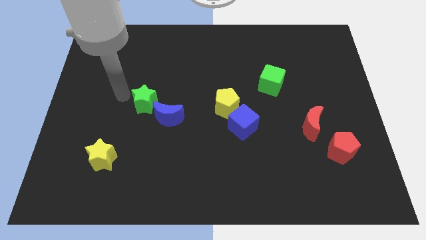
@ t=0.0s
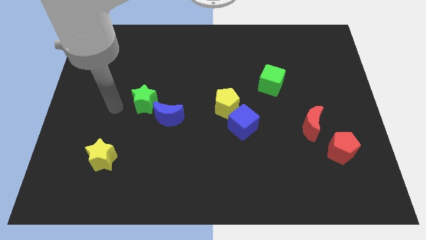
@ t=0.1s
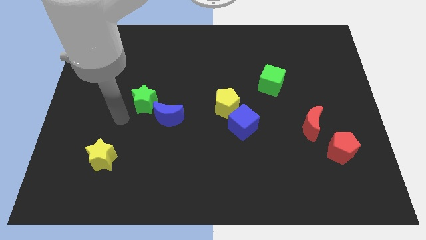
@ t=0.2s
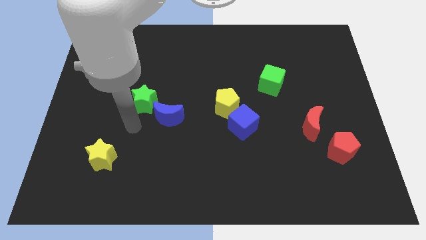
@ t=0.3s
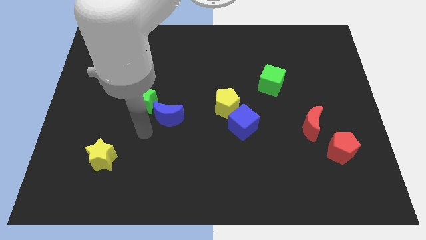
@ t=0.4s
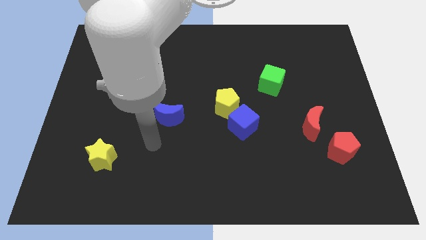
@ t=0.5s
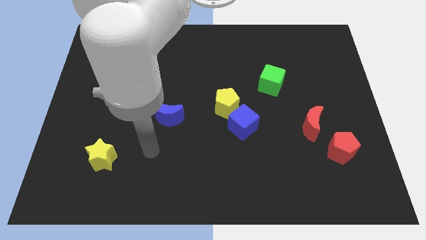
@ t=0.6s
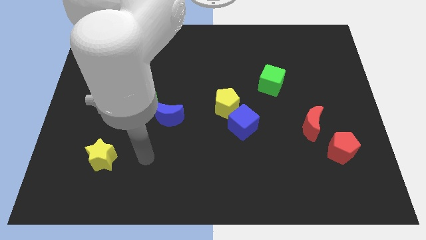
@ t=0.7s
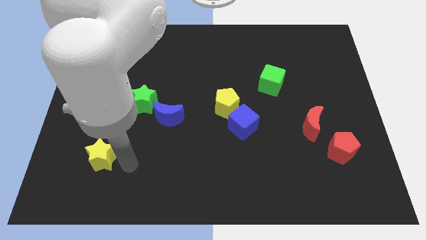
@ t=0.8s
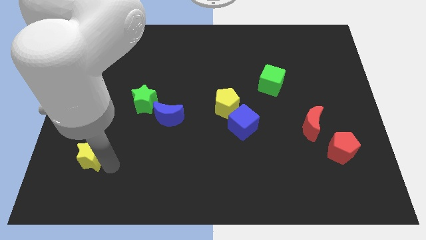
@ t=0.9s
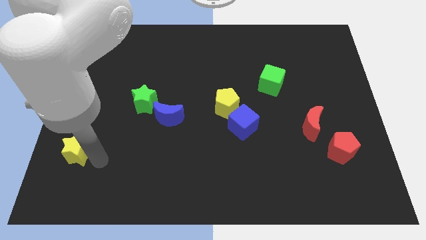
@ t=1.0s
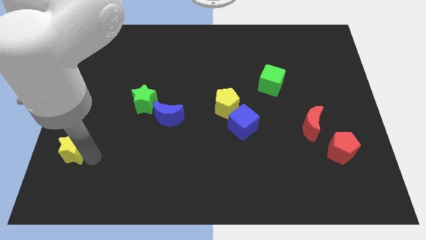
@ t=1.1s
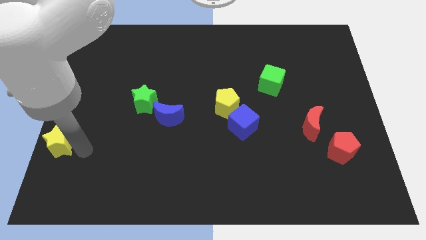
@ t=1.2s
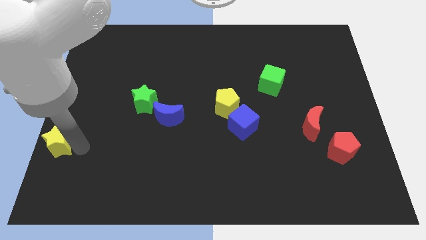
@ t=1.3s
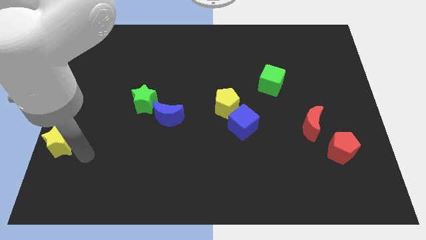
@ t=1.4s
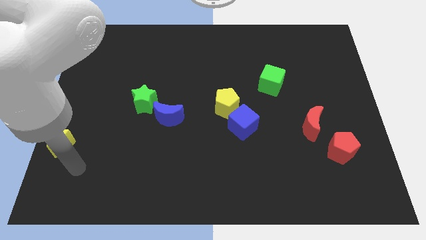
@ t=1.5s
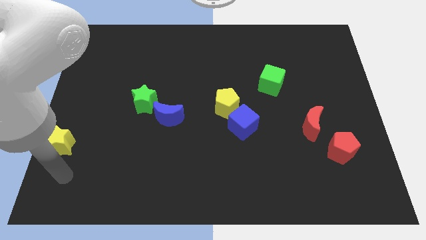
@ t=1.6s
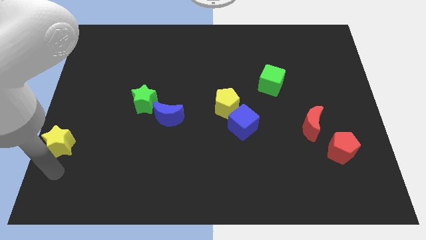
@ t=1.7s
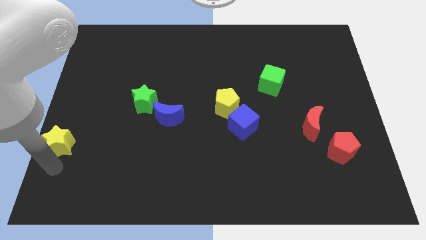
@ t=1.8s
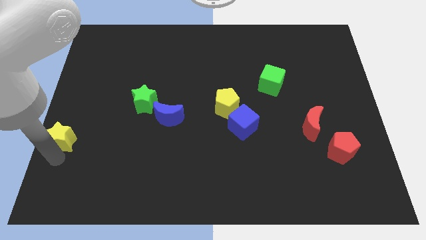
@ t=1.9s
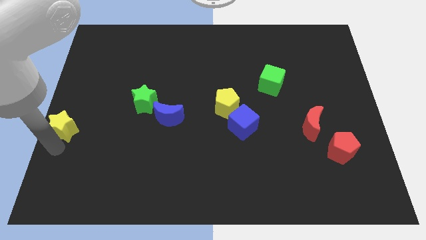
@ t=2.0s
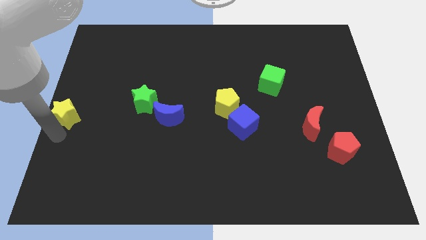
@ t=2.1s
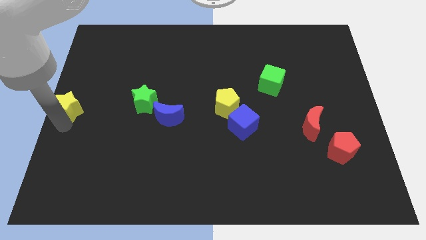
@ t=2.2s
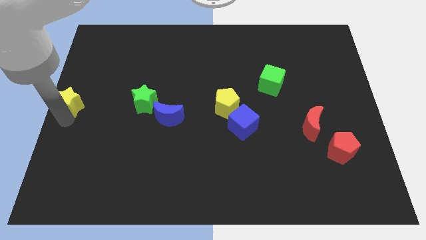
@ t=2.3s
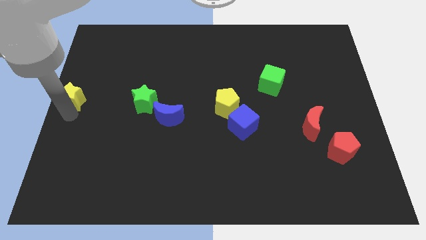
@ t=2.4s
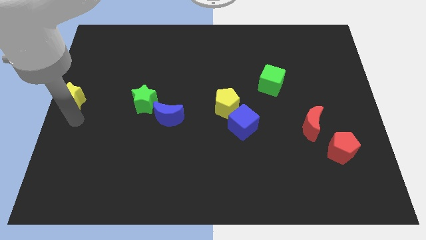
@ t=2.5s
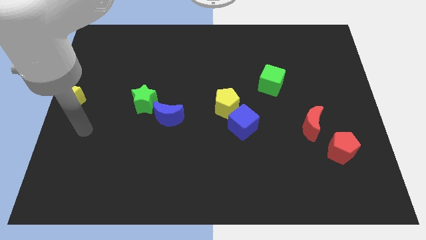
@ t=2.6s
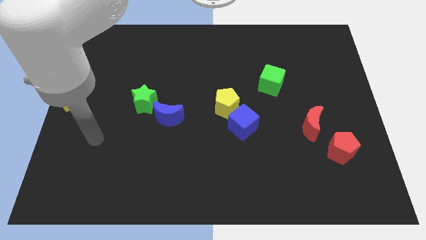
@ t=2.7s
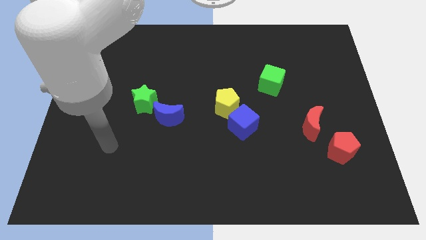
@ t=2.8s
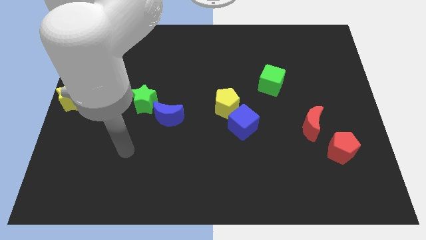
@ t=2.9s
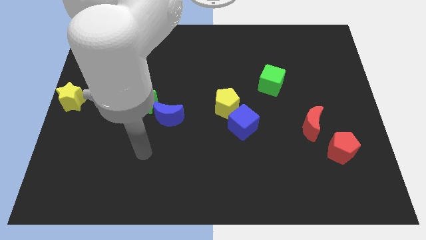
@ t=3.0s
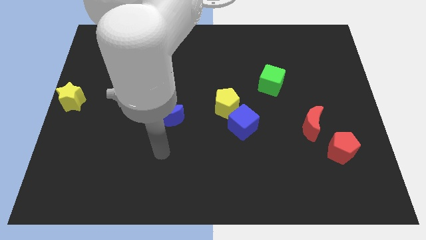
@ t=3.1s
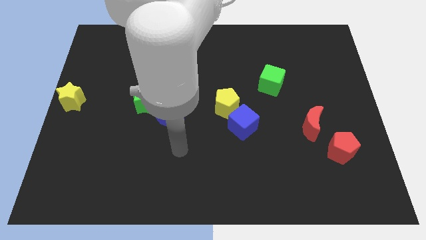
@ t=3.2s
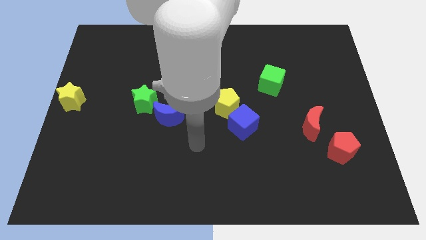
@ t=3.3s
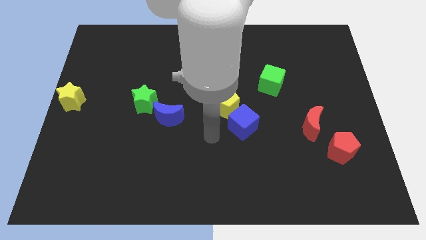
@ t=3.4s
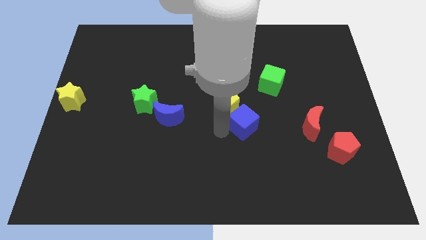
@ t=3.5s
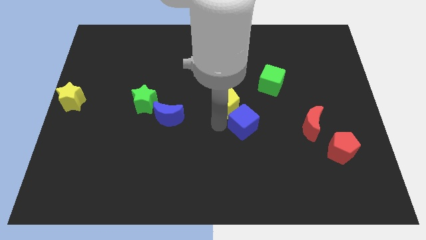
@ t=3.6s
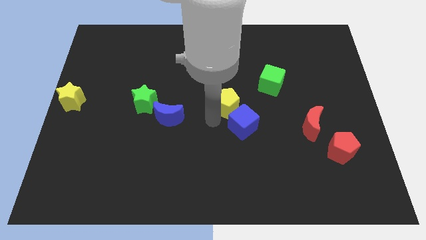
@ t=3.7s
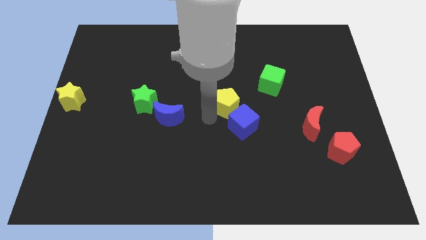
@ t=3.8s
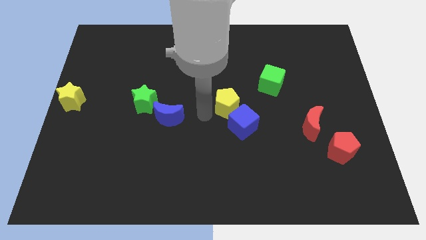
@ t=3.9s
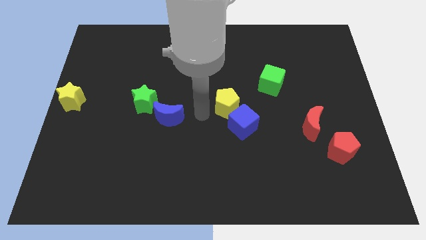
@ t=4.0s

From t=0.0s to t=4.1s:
put the yellow star horizontally left to the green star

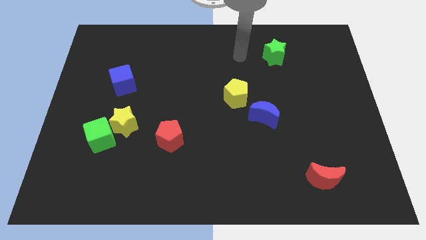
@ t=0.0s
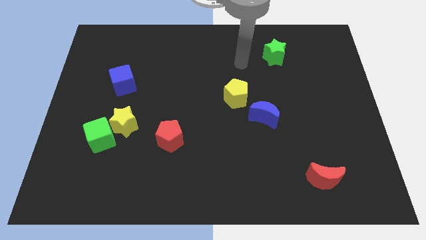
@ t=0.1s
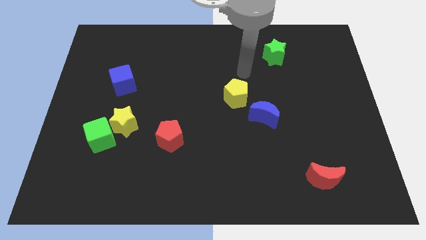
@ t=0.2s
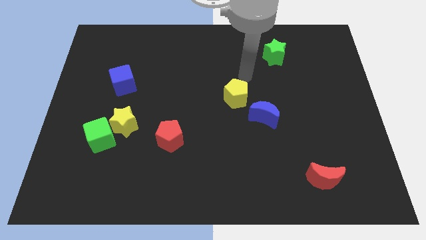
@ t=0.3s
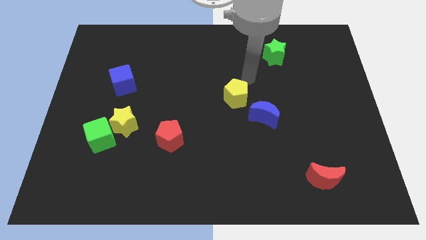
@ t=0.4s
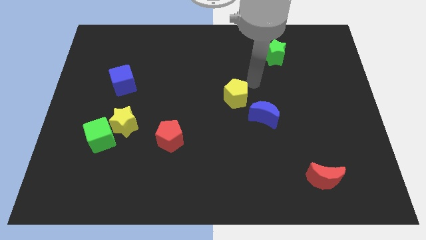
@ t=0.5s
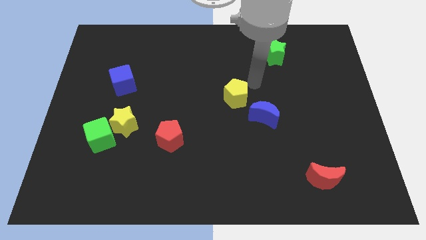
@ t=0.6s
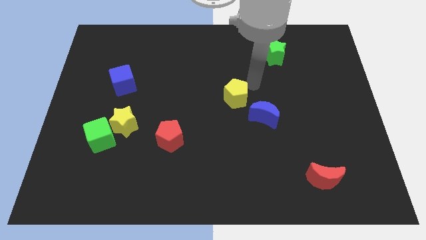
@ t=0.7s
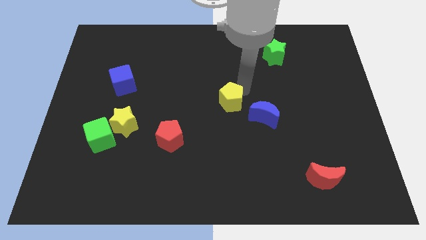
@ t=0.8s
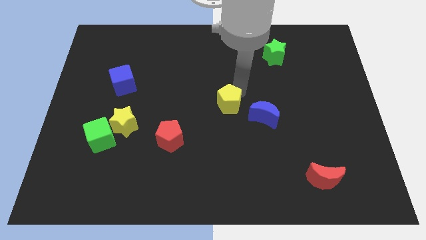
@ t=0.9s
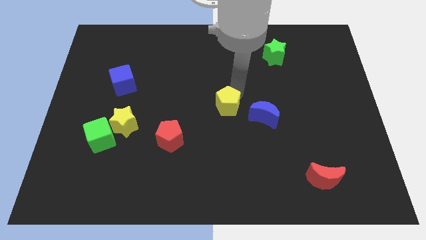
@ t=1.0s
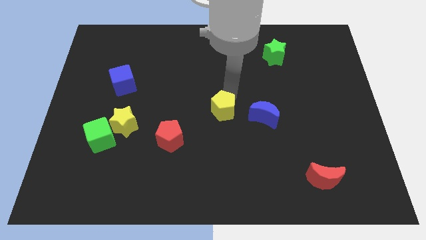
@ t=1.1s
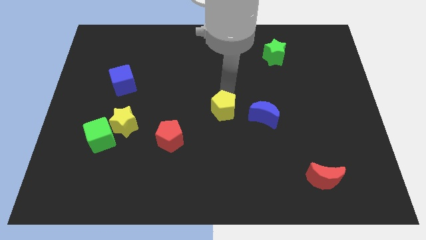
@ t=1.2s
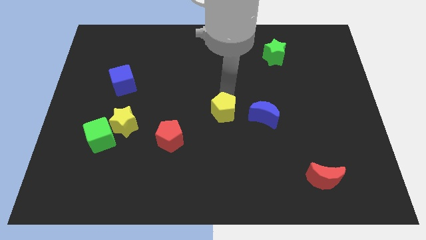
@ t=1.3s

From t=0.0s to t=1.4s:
push the yellow pentagon to the center of the board

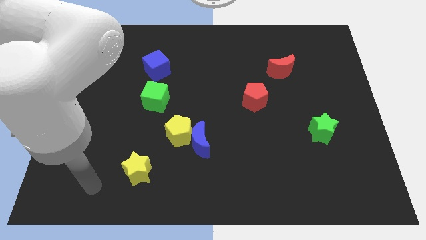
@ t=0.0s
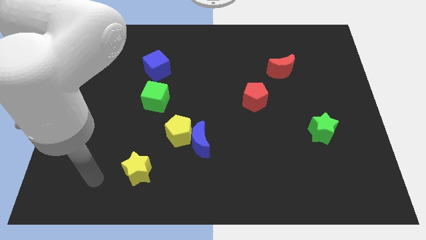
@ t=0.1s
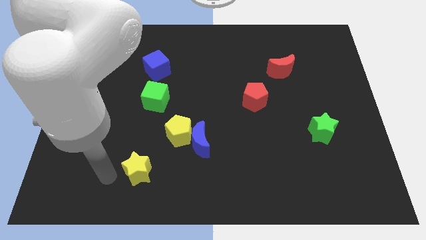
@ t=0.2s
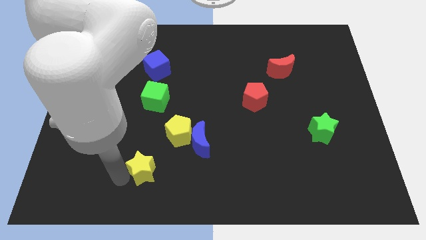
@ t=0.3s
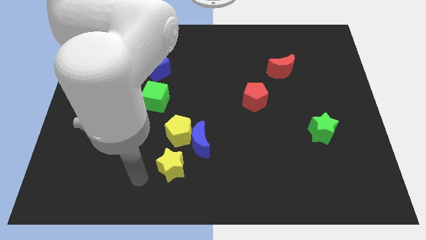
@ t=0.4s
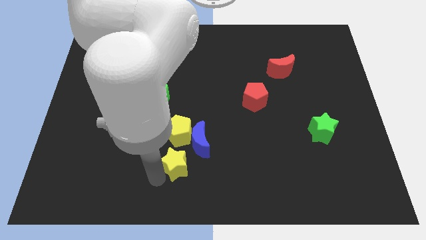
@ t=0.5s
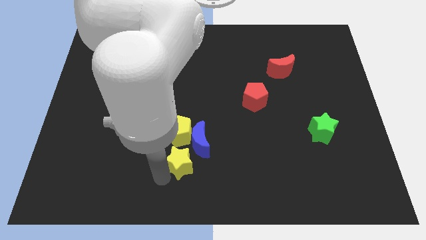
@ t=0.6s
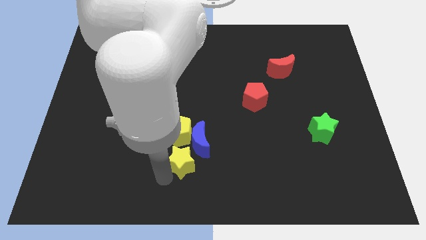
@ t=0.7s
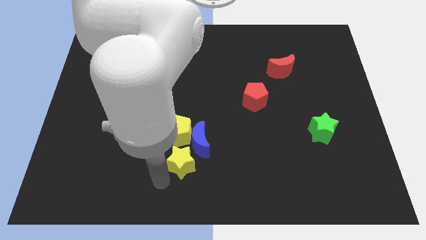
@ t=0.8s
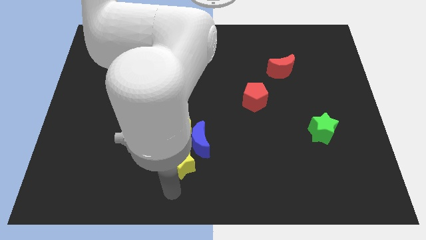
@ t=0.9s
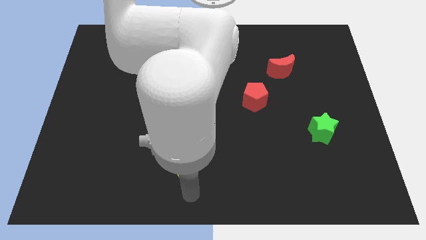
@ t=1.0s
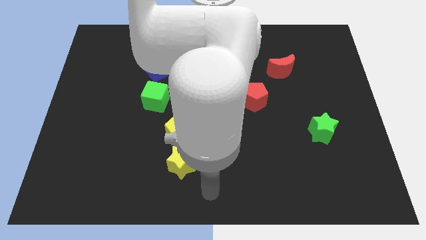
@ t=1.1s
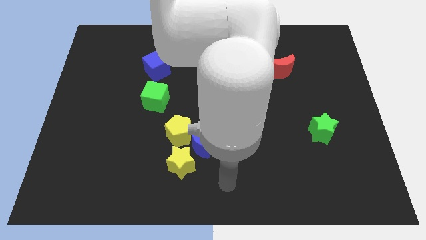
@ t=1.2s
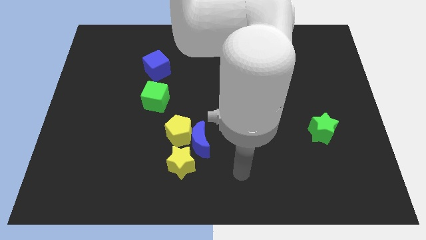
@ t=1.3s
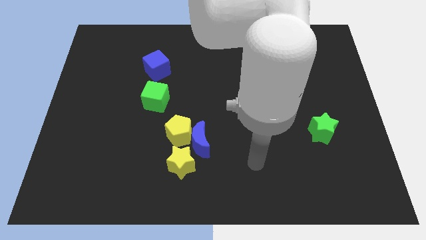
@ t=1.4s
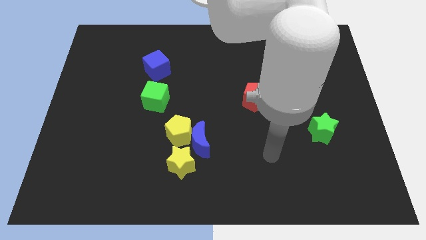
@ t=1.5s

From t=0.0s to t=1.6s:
push the yellow star vertically below the yellow pentagon

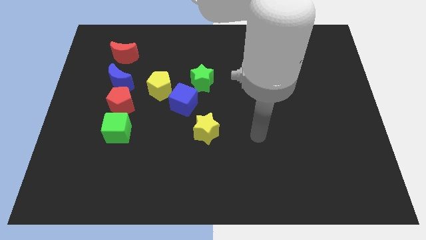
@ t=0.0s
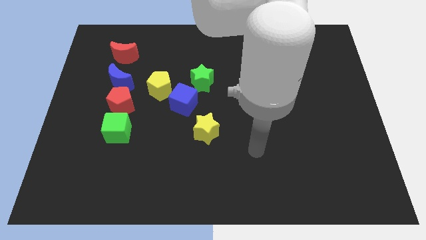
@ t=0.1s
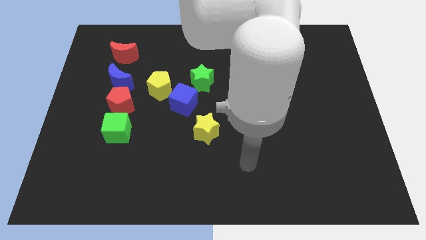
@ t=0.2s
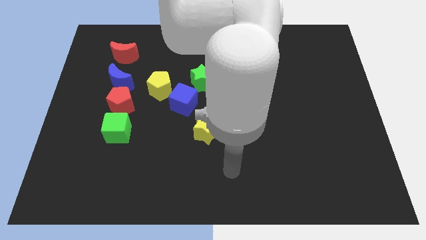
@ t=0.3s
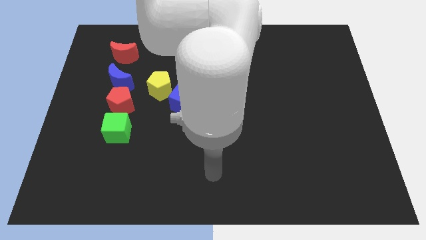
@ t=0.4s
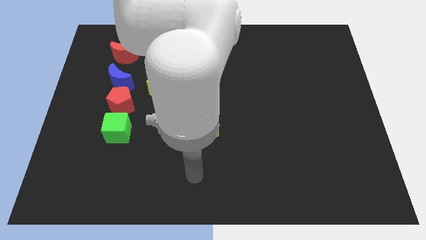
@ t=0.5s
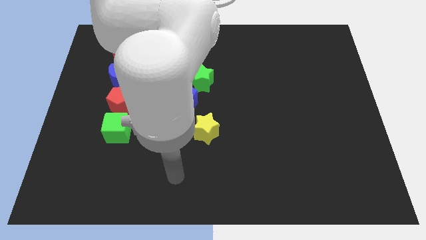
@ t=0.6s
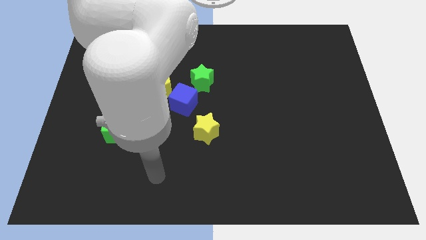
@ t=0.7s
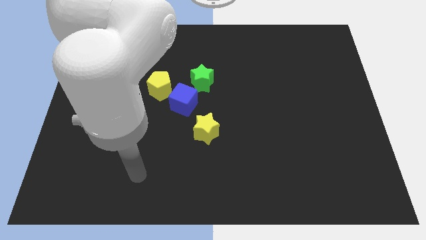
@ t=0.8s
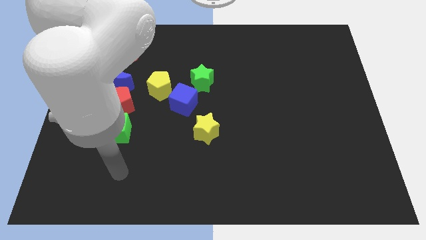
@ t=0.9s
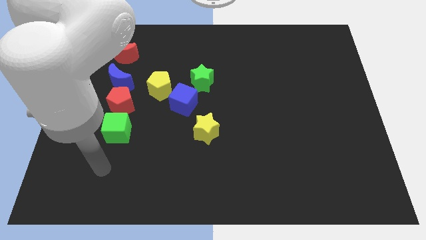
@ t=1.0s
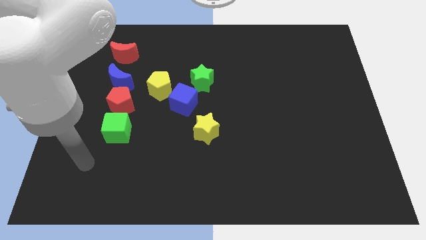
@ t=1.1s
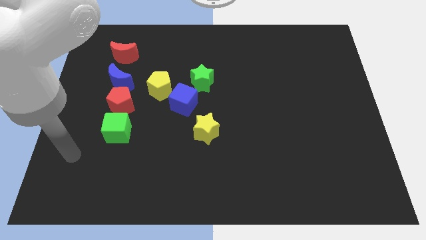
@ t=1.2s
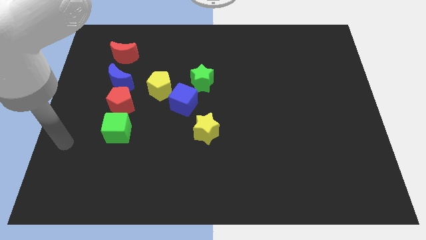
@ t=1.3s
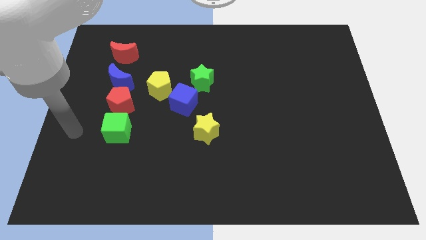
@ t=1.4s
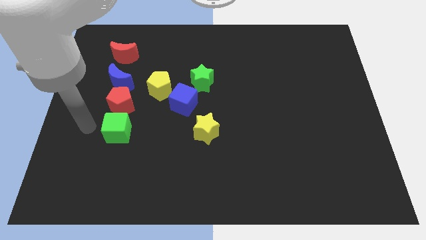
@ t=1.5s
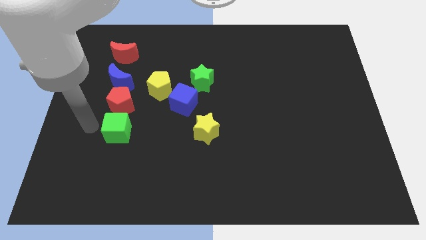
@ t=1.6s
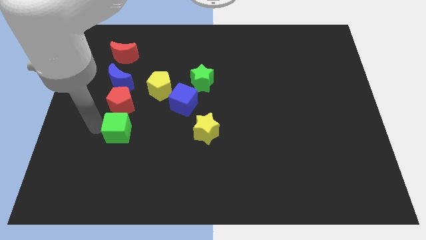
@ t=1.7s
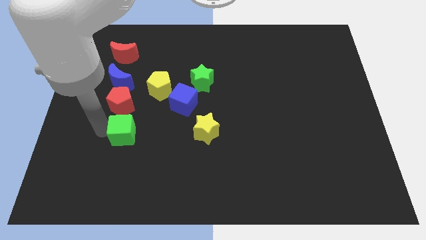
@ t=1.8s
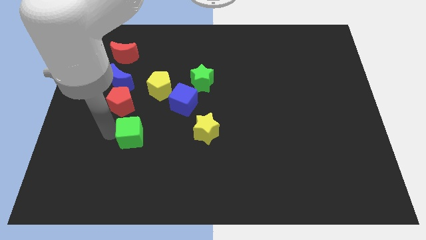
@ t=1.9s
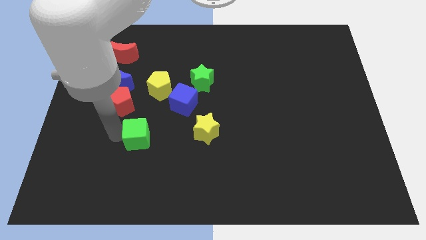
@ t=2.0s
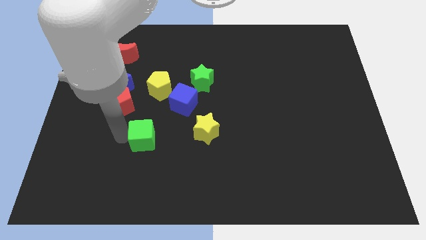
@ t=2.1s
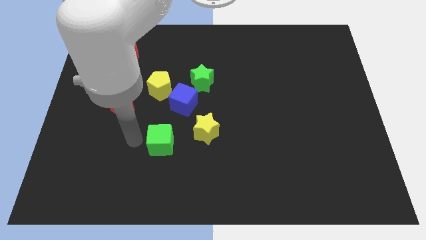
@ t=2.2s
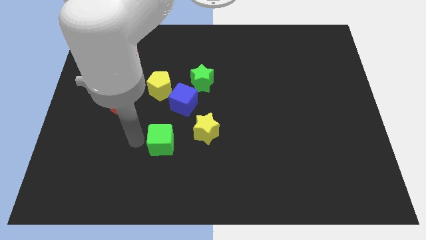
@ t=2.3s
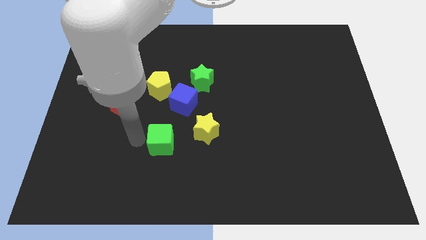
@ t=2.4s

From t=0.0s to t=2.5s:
push the green cube towards the yellow star
